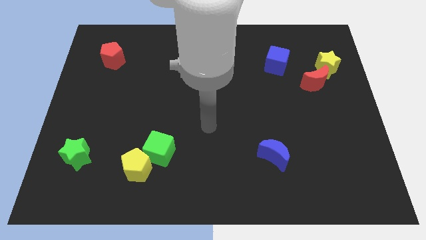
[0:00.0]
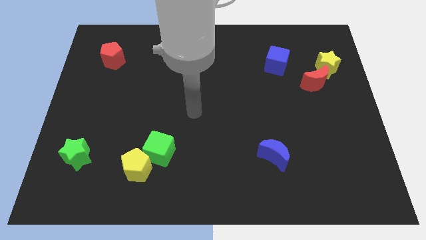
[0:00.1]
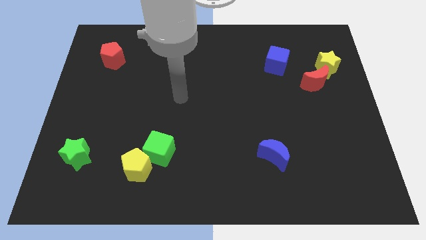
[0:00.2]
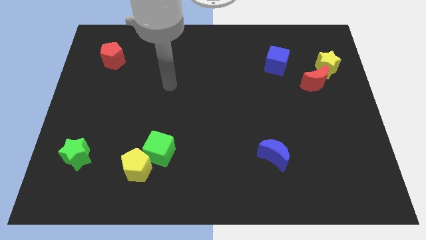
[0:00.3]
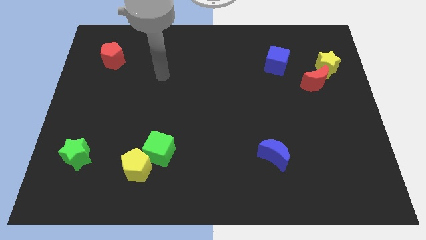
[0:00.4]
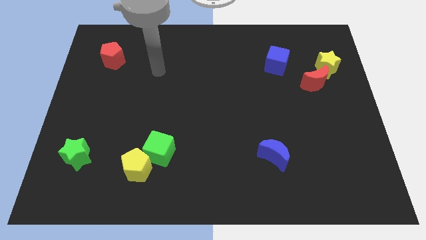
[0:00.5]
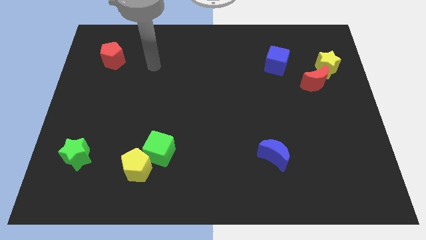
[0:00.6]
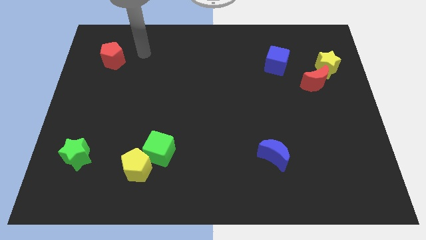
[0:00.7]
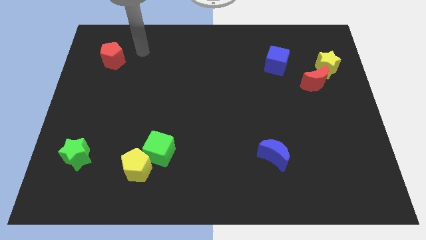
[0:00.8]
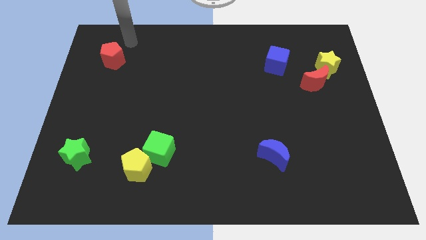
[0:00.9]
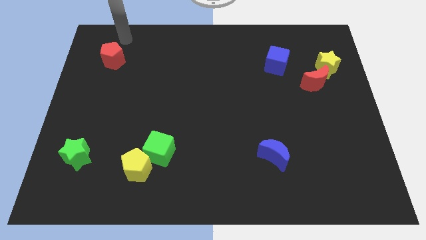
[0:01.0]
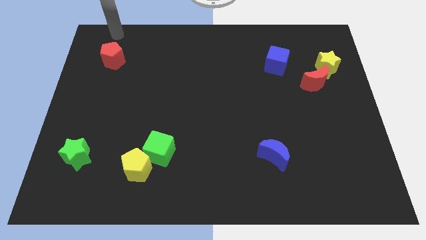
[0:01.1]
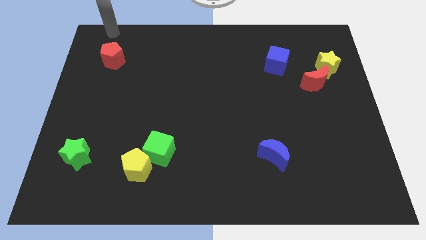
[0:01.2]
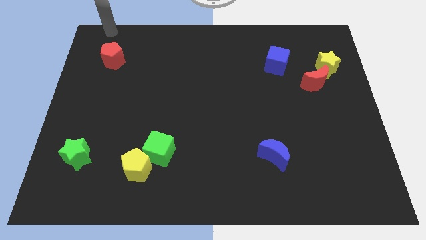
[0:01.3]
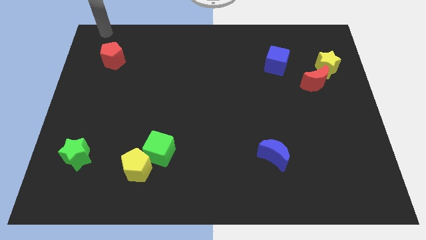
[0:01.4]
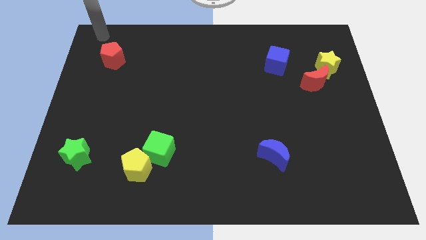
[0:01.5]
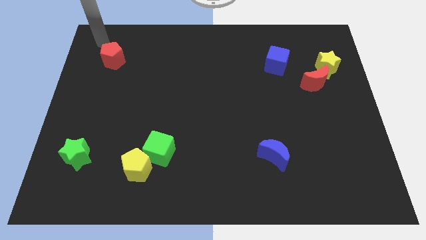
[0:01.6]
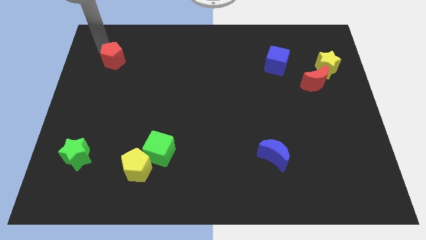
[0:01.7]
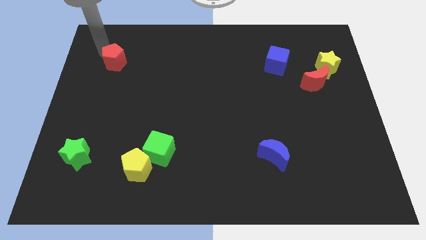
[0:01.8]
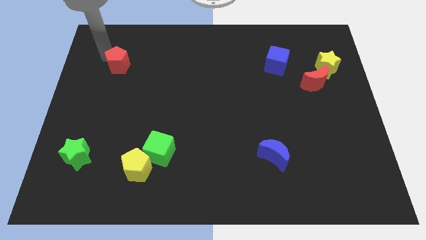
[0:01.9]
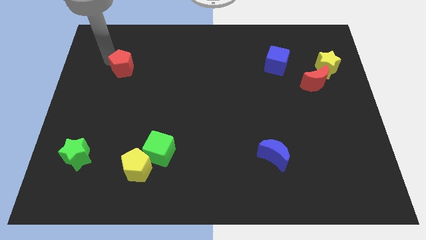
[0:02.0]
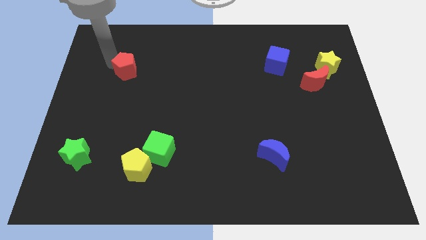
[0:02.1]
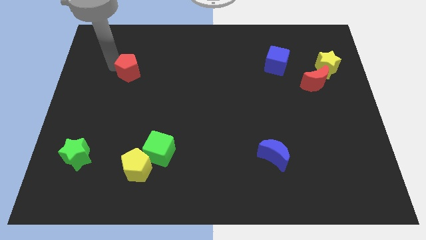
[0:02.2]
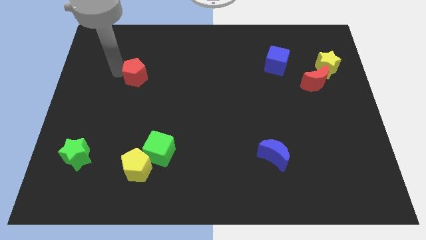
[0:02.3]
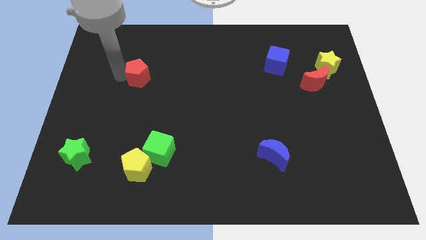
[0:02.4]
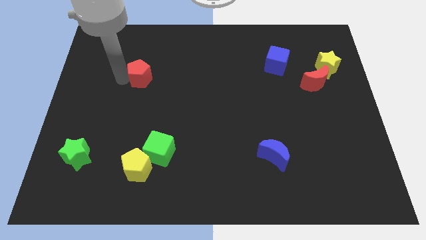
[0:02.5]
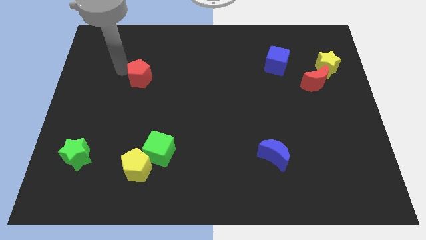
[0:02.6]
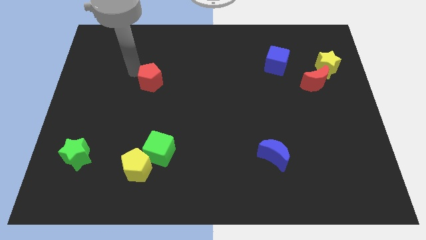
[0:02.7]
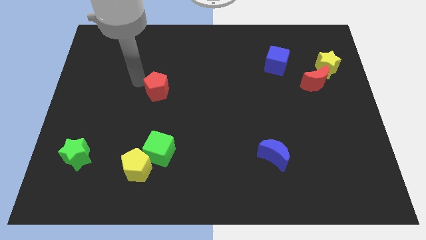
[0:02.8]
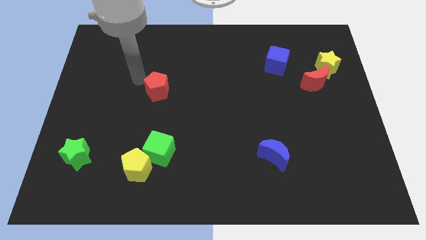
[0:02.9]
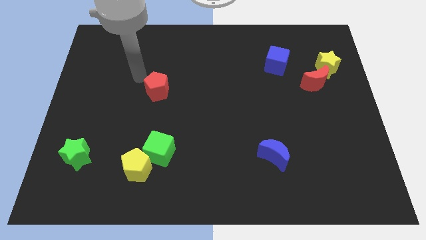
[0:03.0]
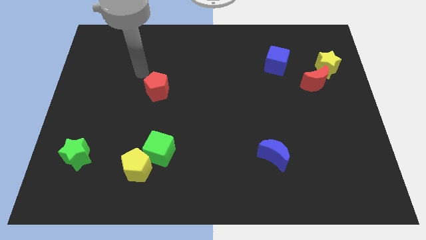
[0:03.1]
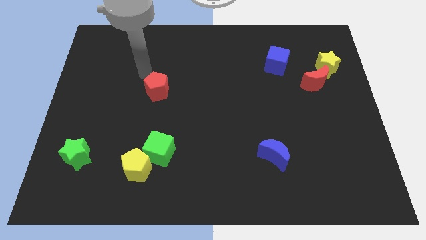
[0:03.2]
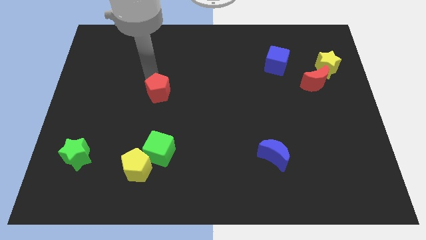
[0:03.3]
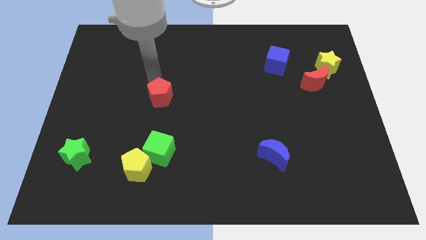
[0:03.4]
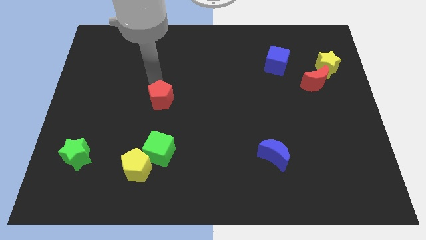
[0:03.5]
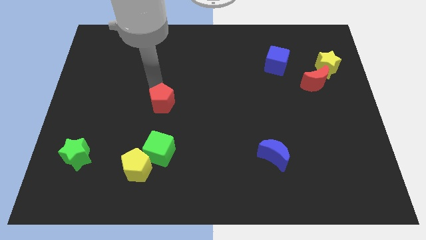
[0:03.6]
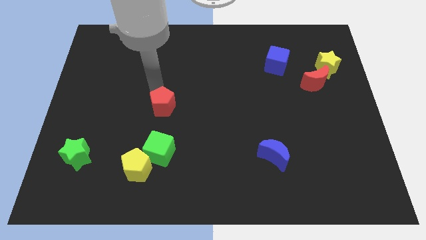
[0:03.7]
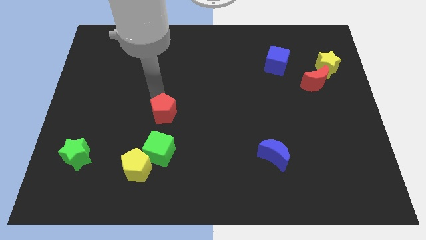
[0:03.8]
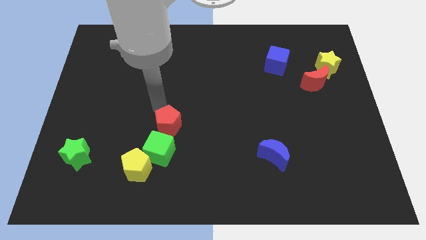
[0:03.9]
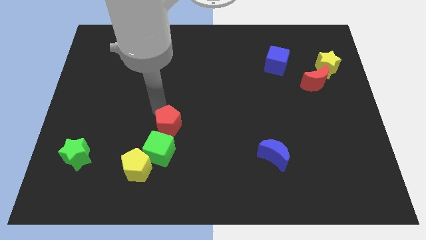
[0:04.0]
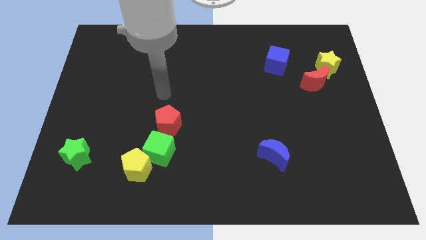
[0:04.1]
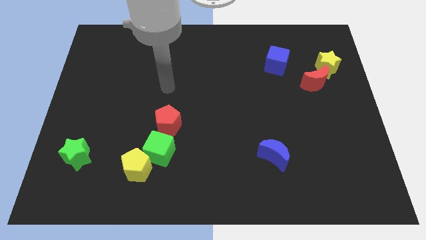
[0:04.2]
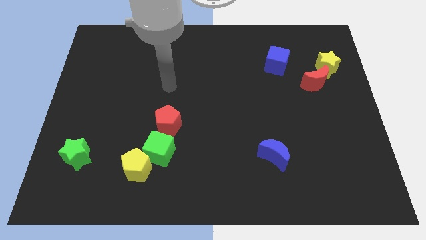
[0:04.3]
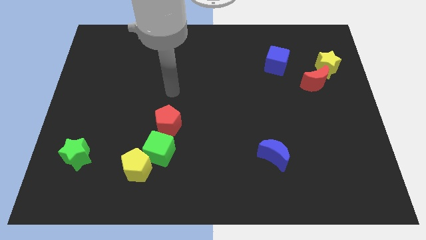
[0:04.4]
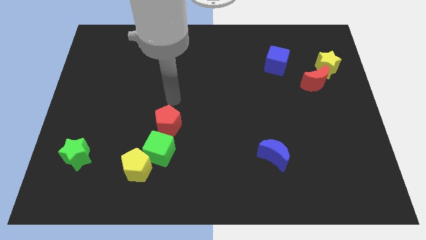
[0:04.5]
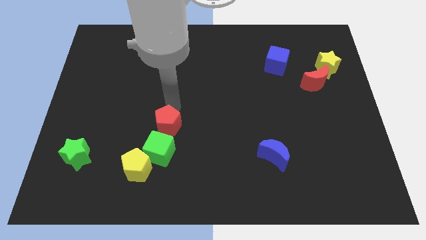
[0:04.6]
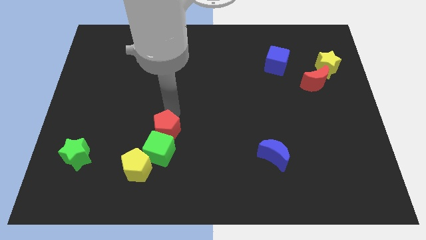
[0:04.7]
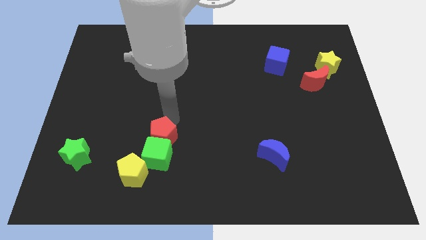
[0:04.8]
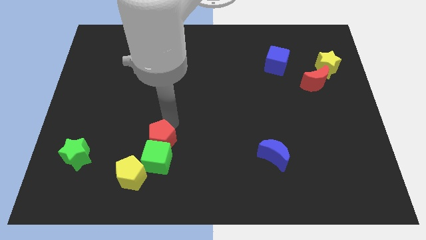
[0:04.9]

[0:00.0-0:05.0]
put the red pentagon towards the green cube

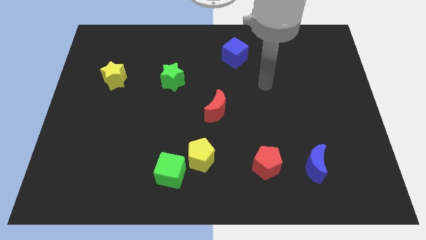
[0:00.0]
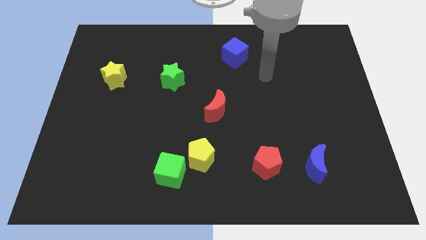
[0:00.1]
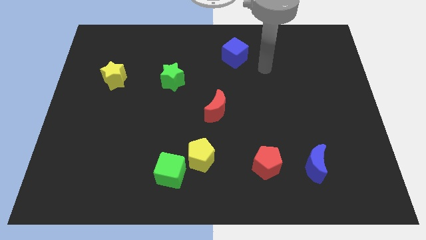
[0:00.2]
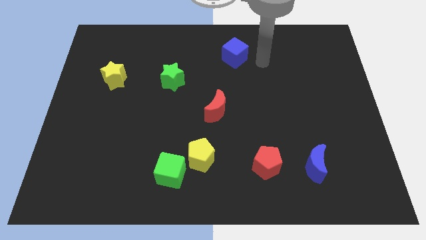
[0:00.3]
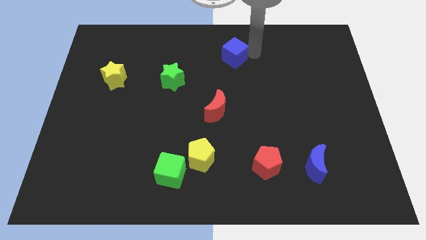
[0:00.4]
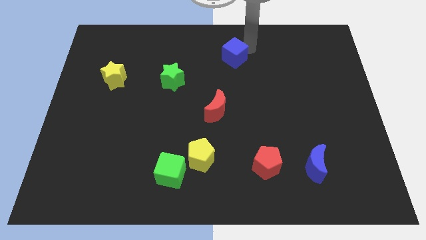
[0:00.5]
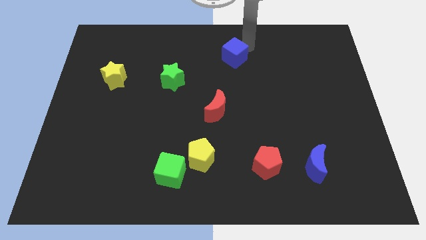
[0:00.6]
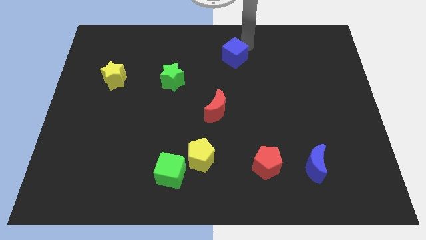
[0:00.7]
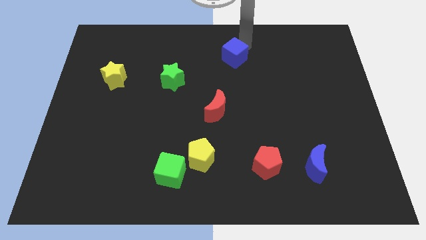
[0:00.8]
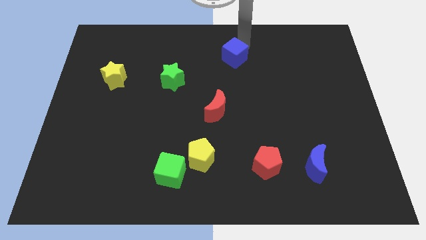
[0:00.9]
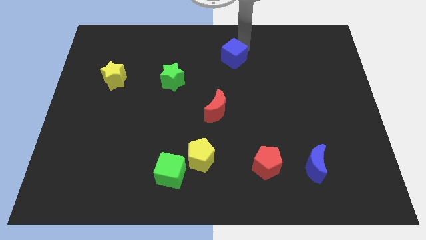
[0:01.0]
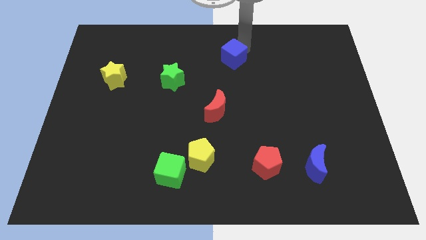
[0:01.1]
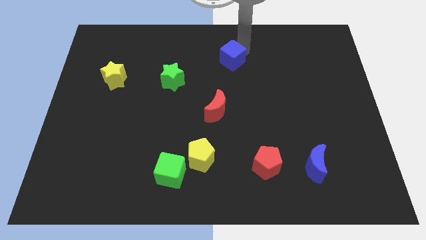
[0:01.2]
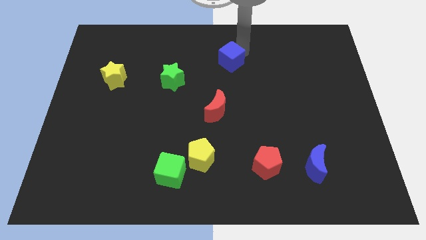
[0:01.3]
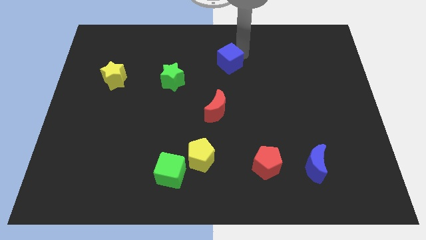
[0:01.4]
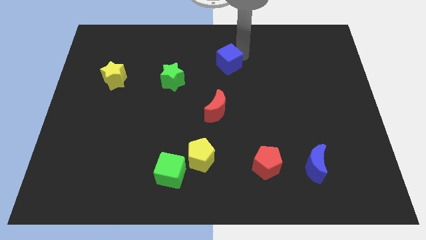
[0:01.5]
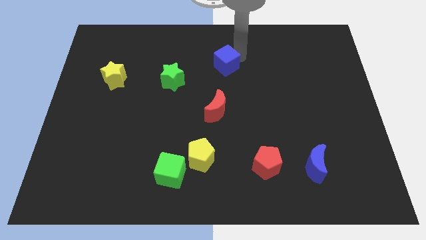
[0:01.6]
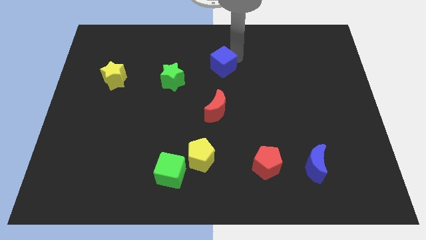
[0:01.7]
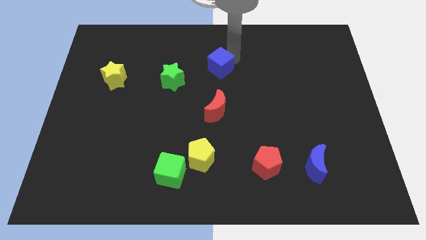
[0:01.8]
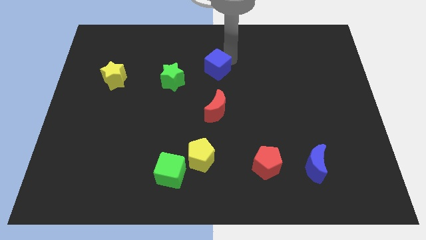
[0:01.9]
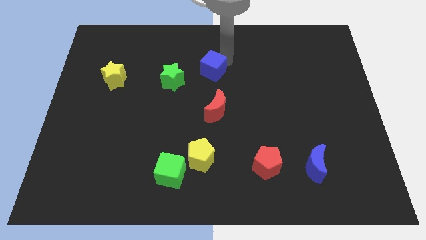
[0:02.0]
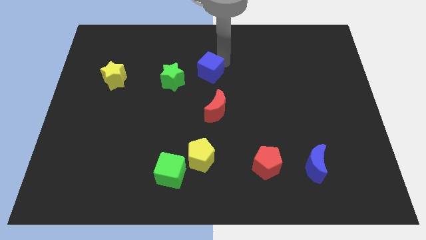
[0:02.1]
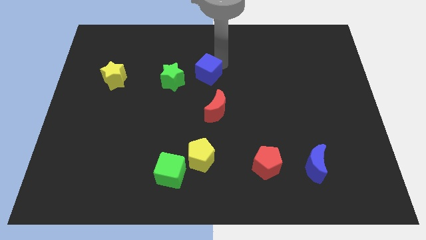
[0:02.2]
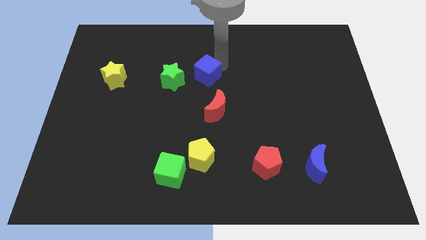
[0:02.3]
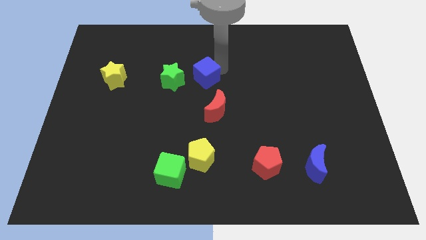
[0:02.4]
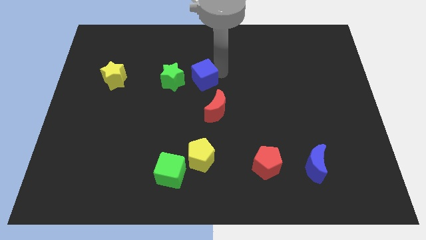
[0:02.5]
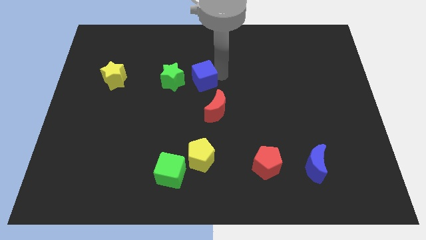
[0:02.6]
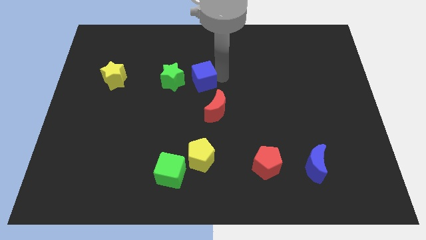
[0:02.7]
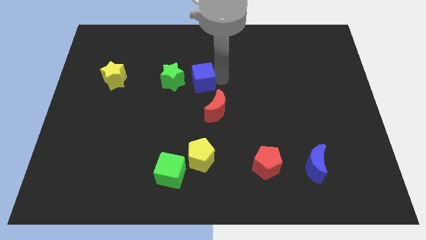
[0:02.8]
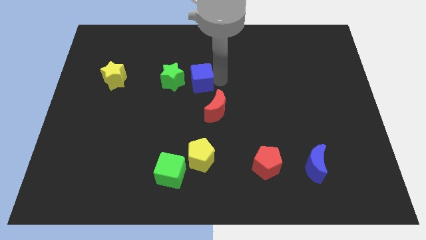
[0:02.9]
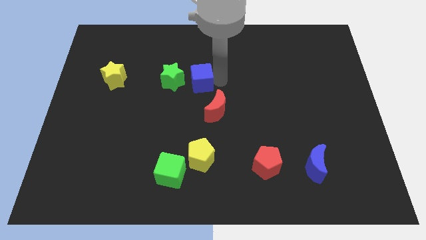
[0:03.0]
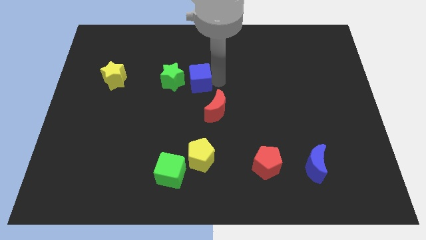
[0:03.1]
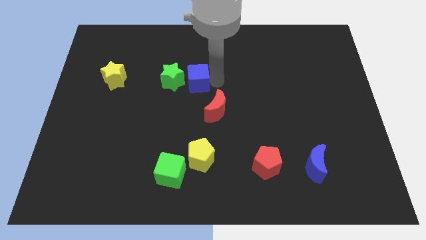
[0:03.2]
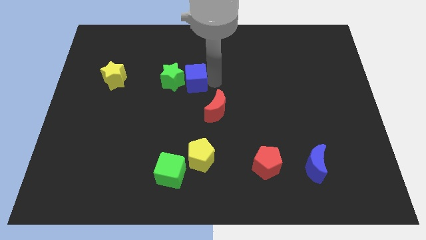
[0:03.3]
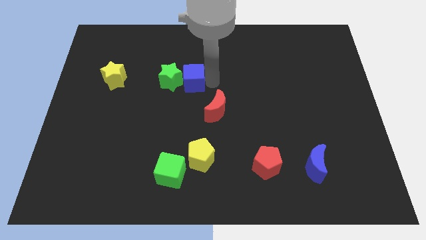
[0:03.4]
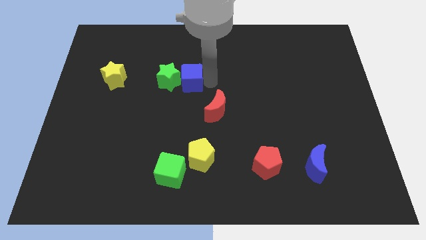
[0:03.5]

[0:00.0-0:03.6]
move the blue cube towards the green star
